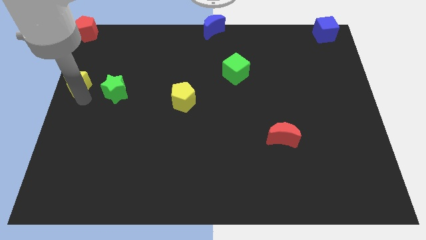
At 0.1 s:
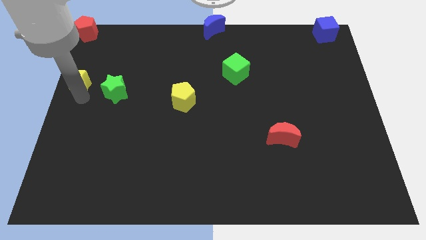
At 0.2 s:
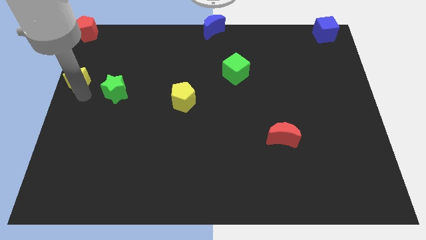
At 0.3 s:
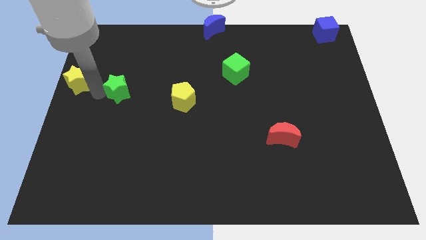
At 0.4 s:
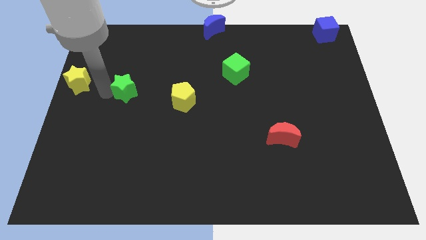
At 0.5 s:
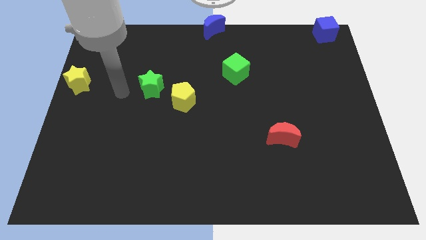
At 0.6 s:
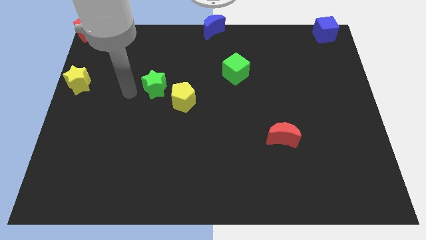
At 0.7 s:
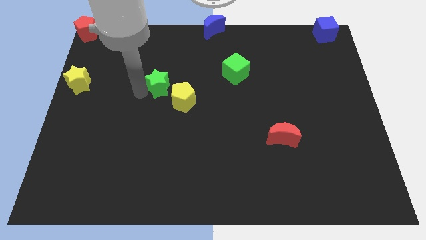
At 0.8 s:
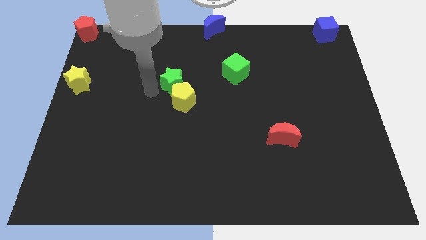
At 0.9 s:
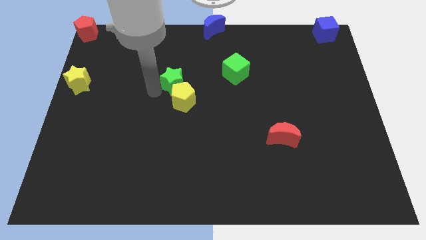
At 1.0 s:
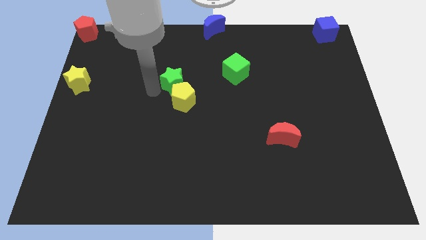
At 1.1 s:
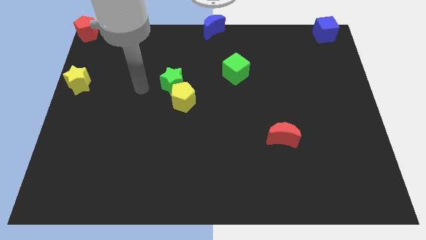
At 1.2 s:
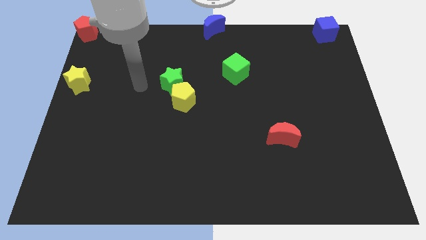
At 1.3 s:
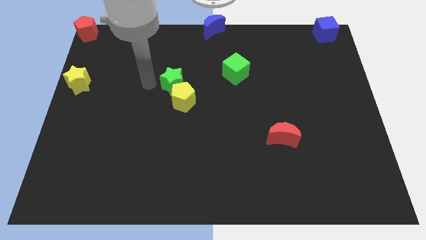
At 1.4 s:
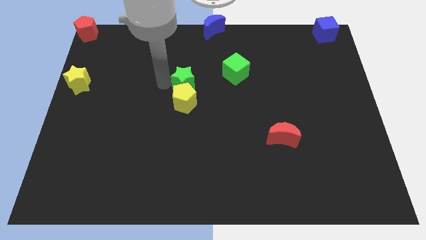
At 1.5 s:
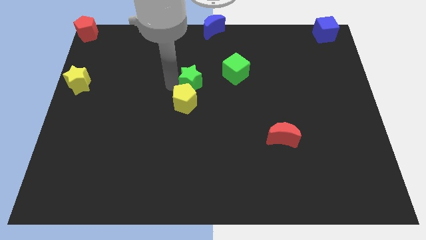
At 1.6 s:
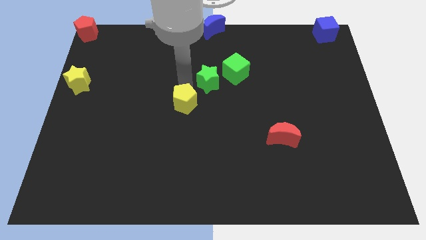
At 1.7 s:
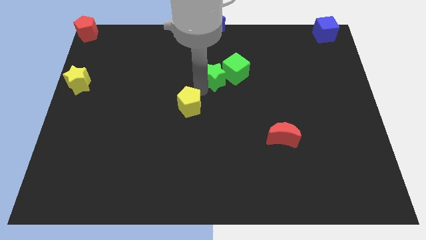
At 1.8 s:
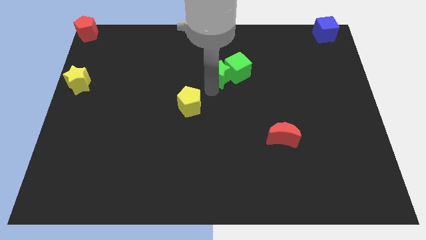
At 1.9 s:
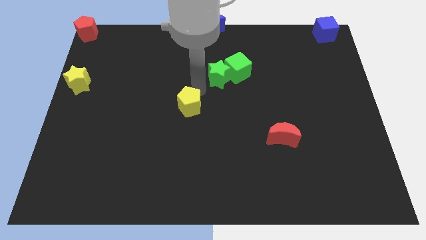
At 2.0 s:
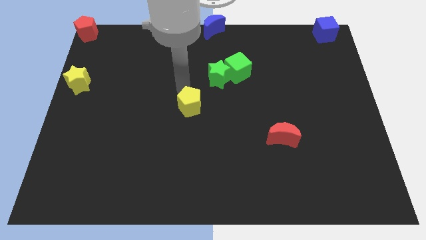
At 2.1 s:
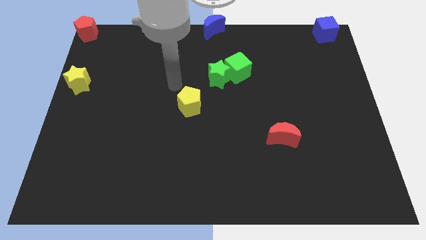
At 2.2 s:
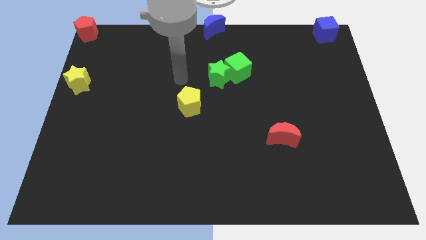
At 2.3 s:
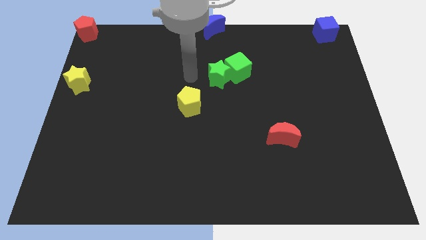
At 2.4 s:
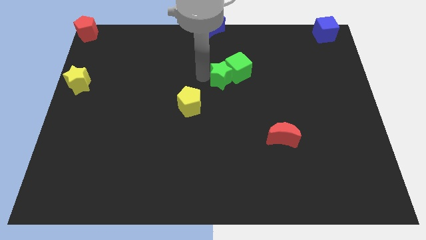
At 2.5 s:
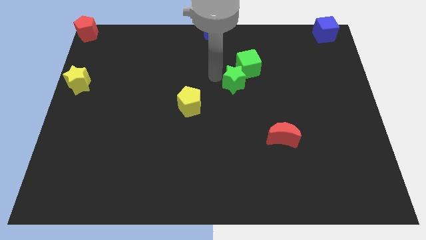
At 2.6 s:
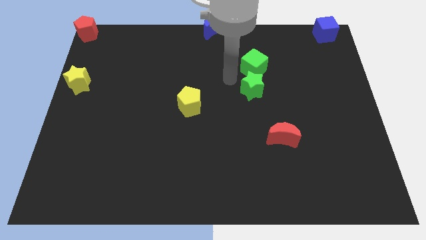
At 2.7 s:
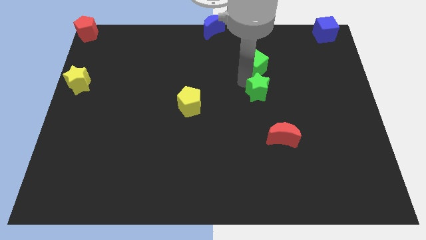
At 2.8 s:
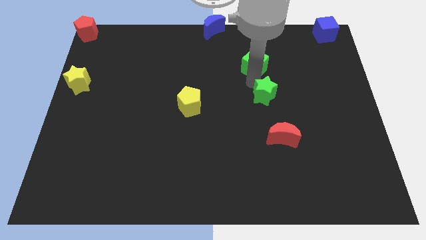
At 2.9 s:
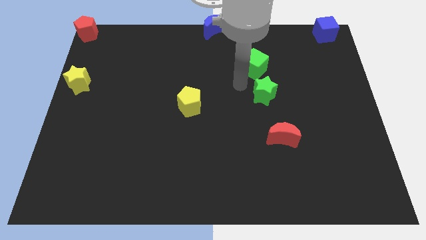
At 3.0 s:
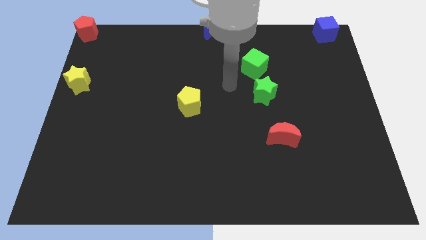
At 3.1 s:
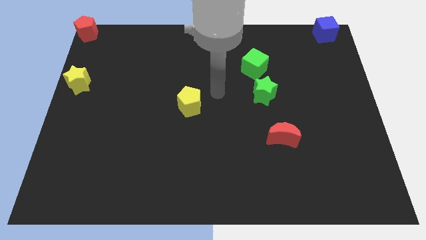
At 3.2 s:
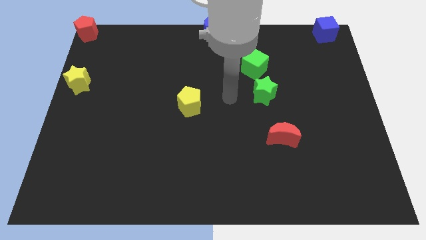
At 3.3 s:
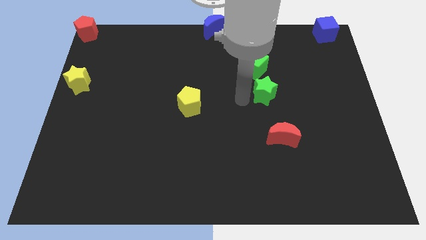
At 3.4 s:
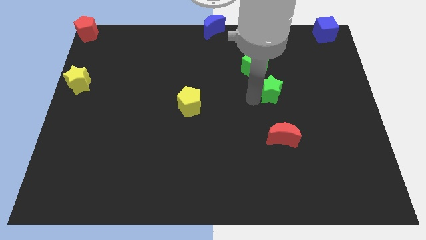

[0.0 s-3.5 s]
place the green star below the green cube

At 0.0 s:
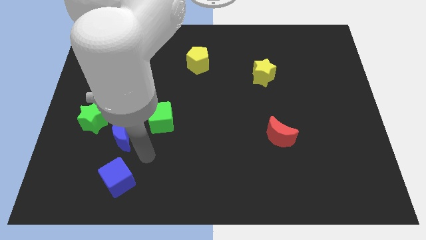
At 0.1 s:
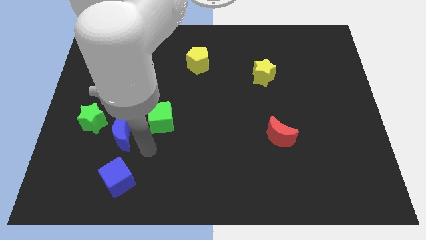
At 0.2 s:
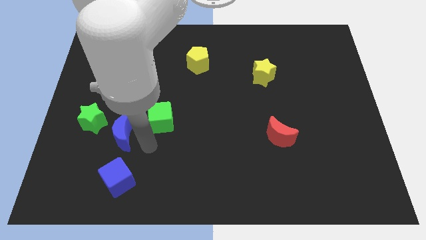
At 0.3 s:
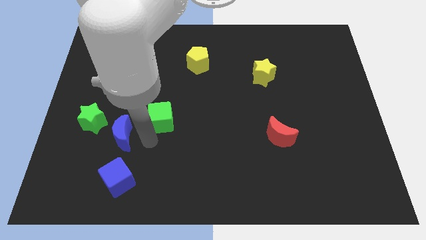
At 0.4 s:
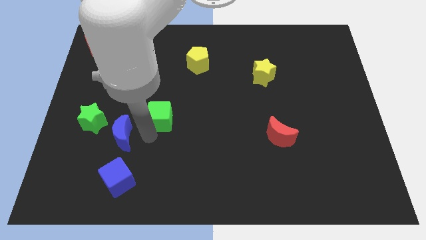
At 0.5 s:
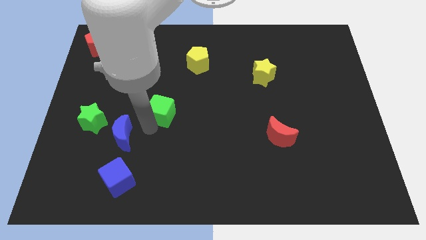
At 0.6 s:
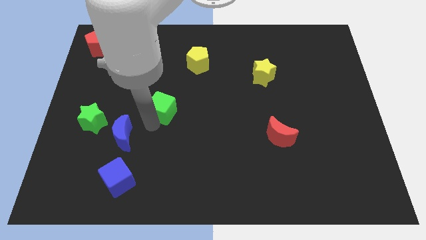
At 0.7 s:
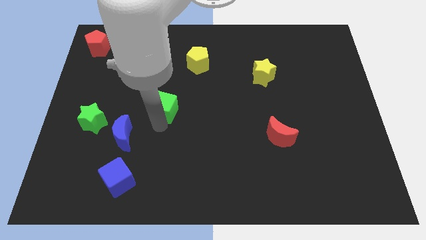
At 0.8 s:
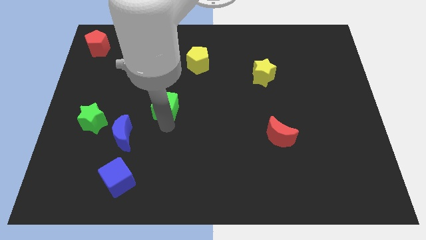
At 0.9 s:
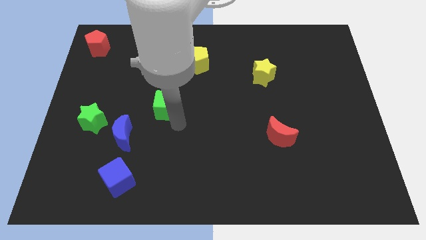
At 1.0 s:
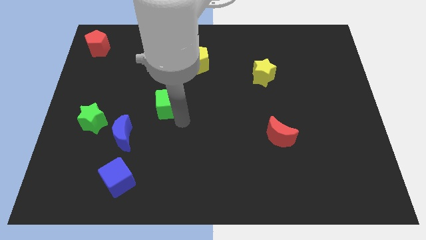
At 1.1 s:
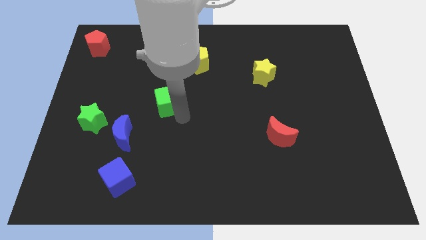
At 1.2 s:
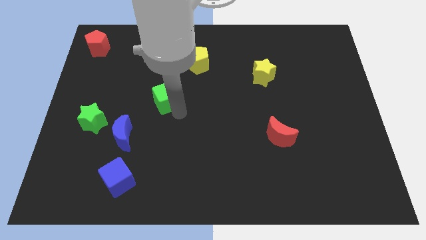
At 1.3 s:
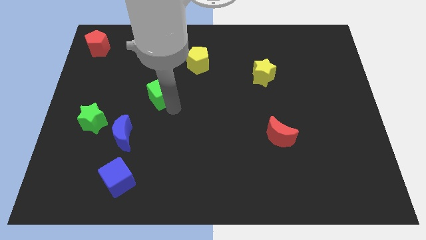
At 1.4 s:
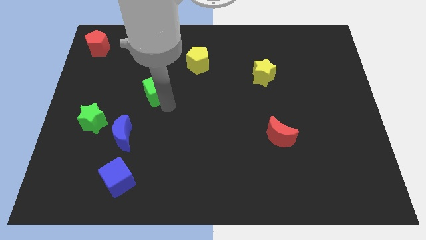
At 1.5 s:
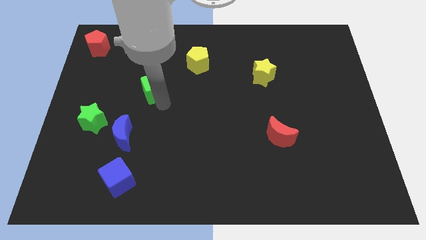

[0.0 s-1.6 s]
place the green cube in between the yellow pentagon and blue moon

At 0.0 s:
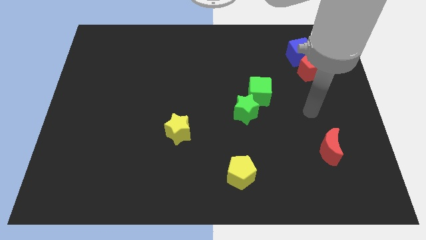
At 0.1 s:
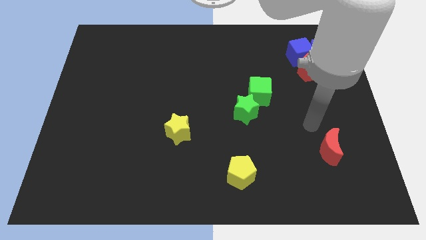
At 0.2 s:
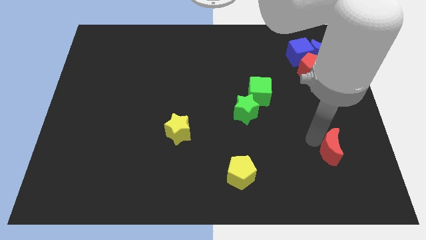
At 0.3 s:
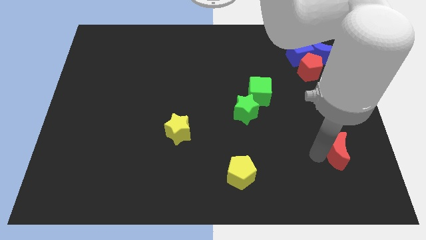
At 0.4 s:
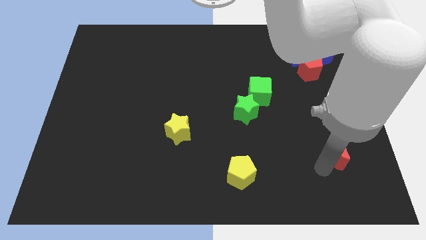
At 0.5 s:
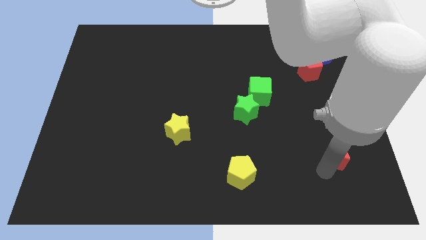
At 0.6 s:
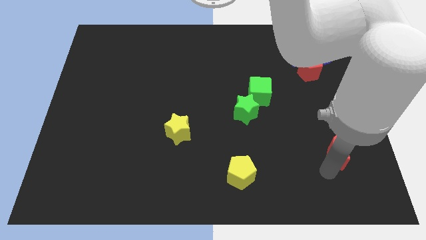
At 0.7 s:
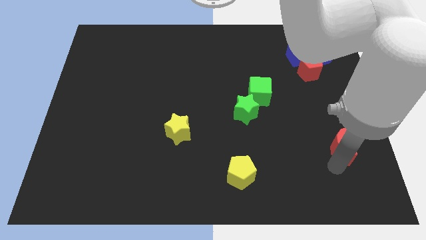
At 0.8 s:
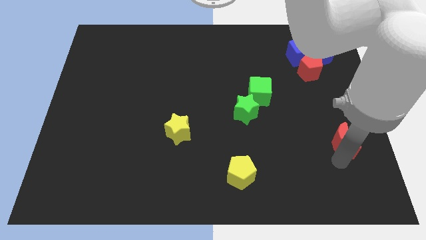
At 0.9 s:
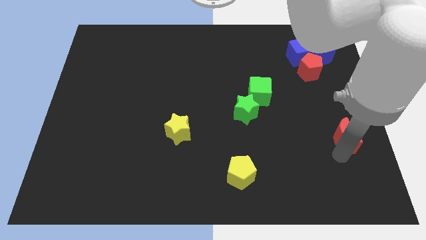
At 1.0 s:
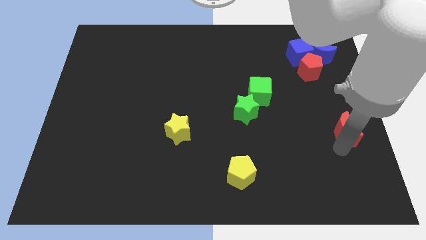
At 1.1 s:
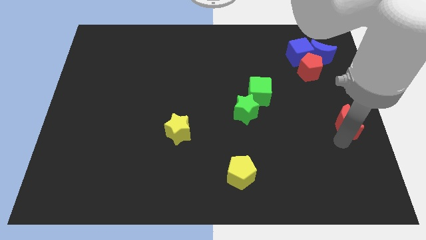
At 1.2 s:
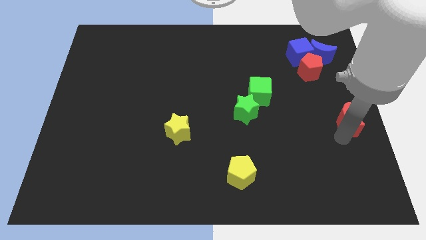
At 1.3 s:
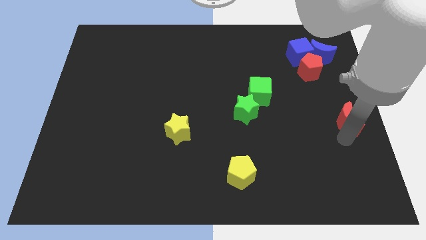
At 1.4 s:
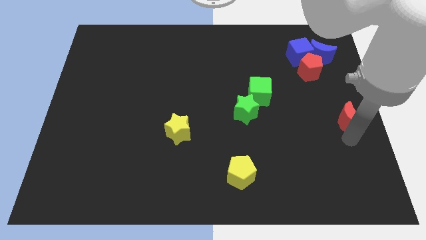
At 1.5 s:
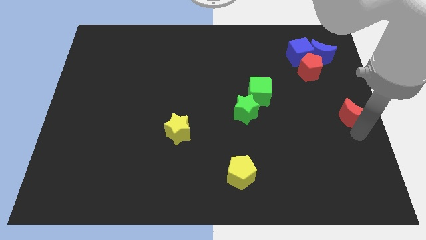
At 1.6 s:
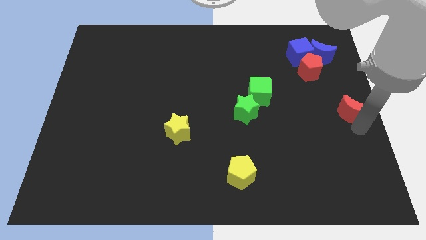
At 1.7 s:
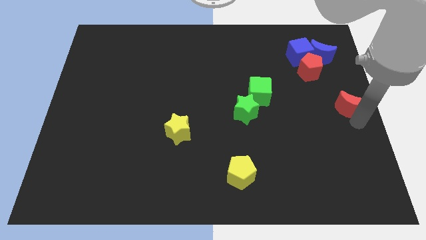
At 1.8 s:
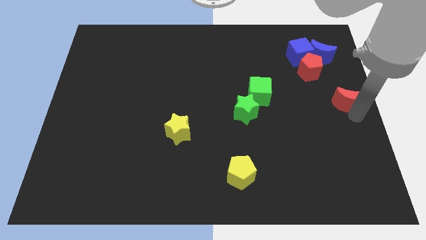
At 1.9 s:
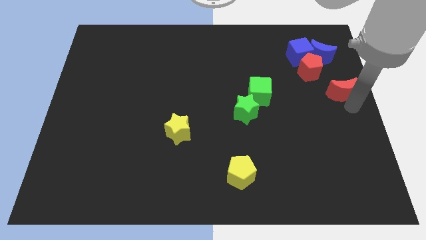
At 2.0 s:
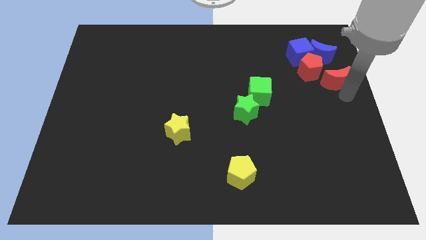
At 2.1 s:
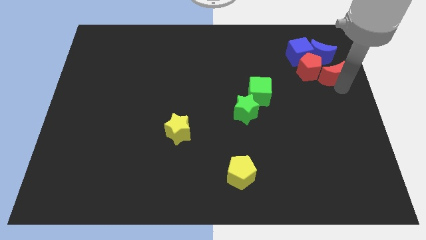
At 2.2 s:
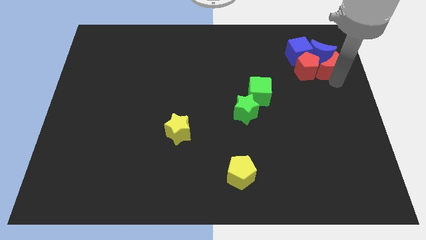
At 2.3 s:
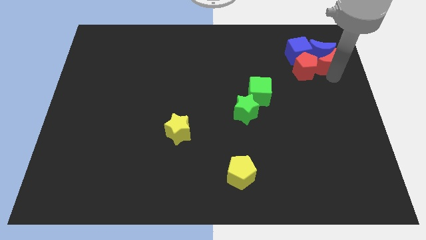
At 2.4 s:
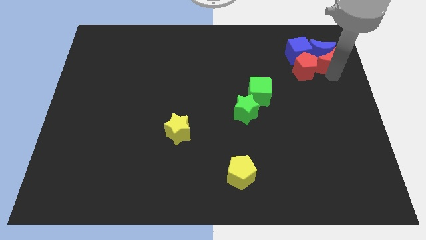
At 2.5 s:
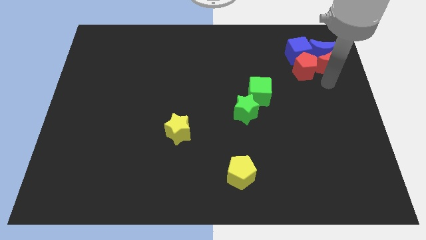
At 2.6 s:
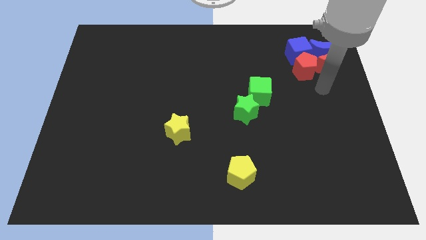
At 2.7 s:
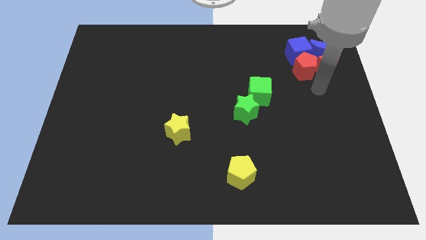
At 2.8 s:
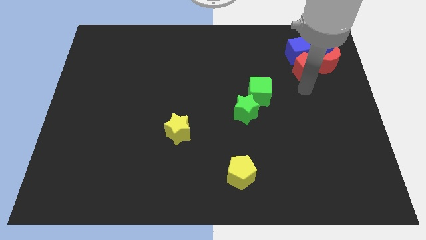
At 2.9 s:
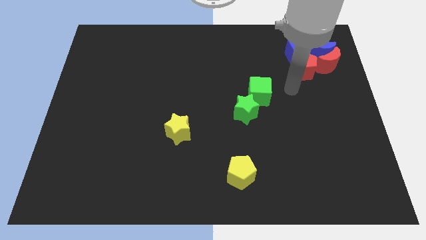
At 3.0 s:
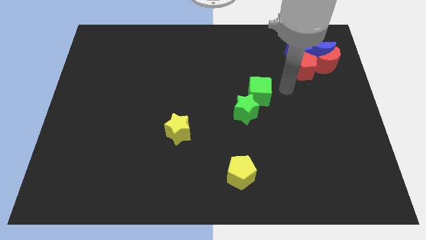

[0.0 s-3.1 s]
move the red crescent into the bottom side of the blue crescent

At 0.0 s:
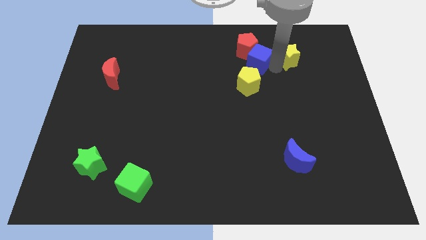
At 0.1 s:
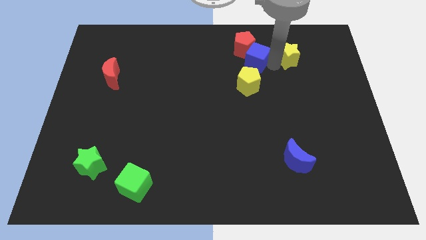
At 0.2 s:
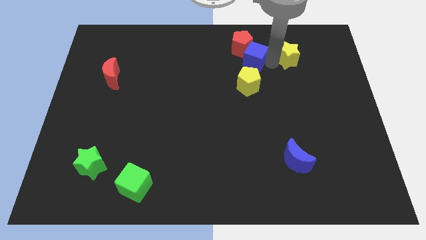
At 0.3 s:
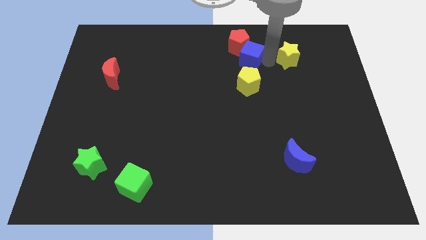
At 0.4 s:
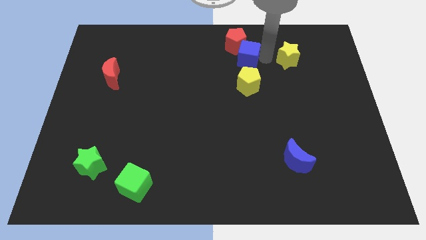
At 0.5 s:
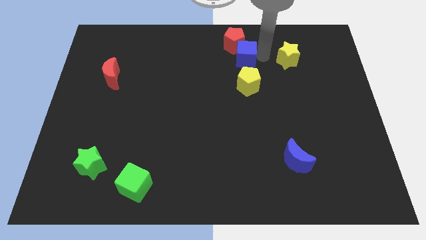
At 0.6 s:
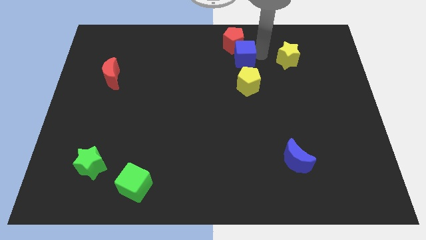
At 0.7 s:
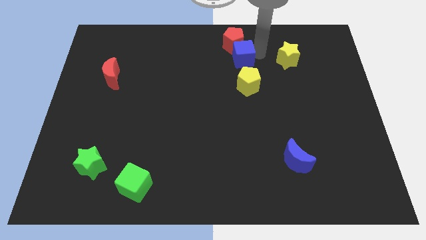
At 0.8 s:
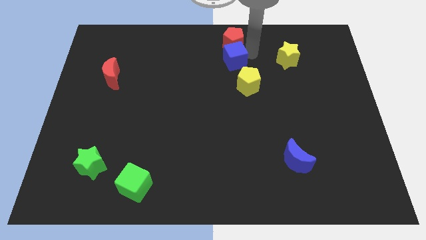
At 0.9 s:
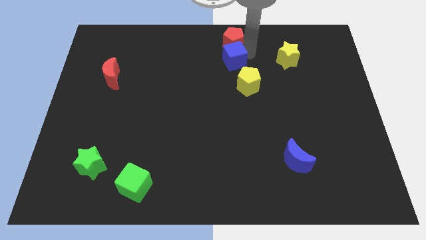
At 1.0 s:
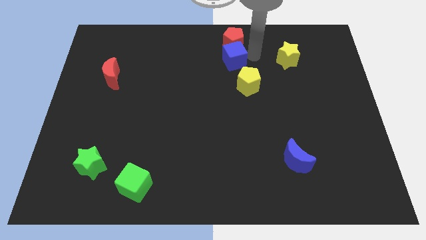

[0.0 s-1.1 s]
push blue cube to the left
